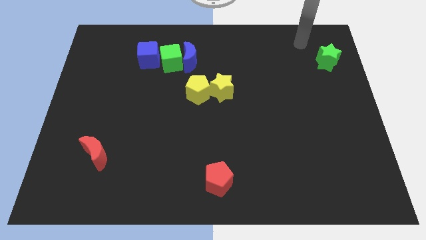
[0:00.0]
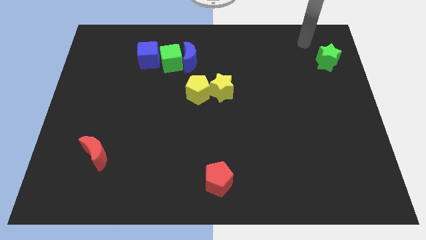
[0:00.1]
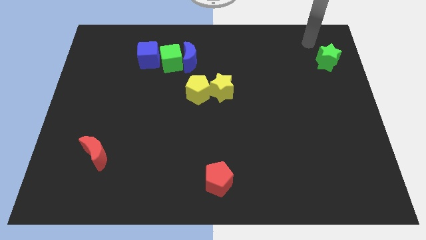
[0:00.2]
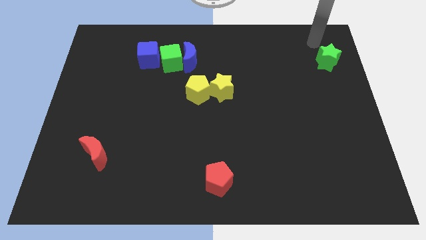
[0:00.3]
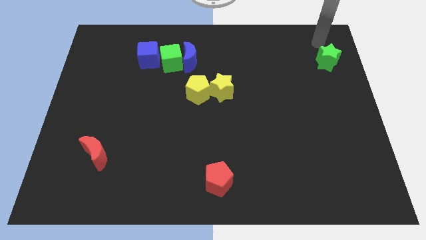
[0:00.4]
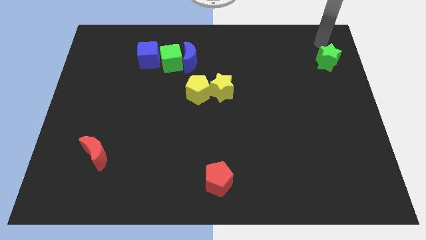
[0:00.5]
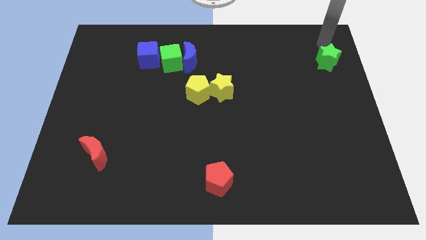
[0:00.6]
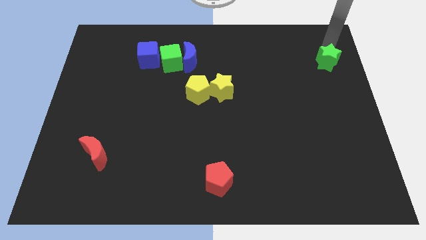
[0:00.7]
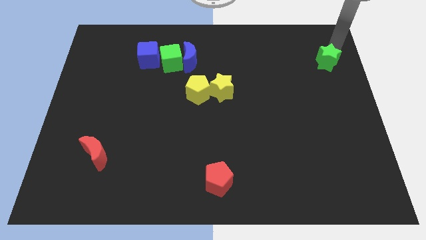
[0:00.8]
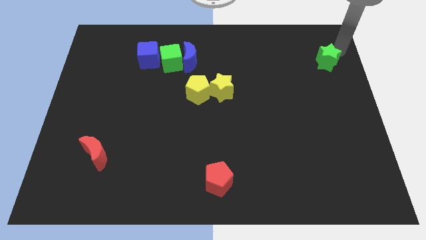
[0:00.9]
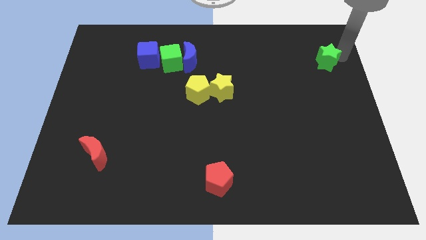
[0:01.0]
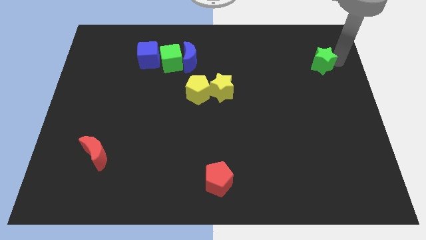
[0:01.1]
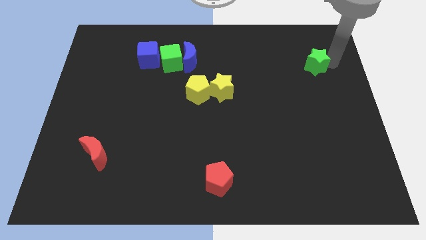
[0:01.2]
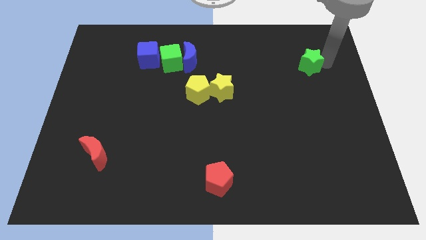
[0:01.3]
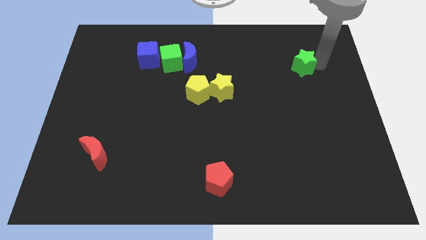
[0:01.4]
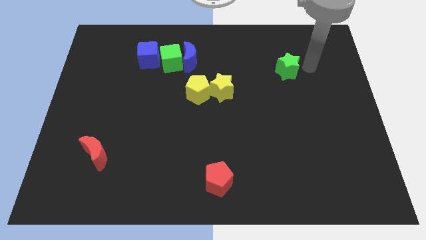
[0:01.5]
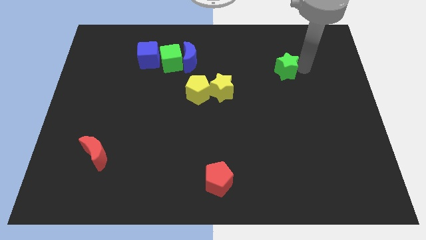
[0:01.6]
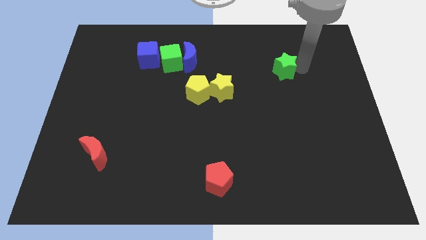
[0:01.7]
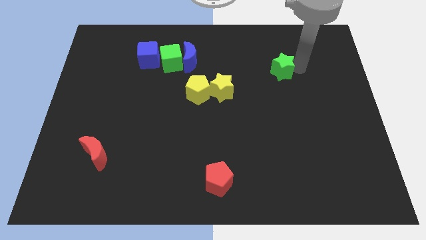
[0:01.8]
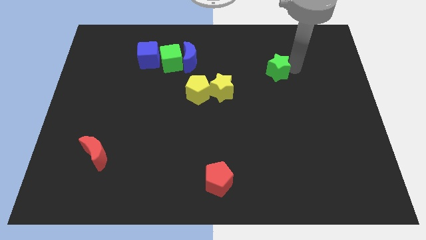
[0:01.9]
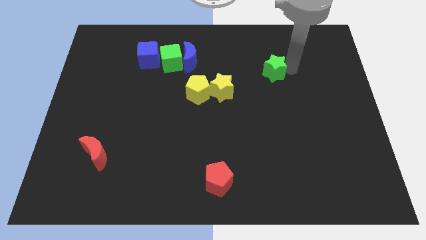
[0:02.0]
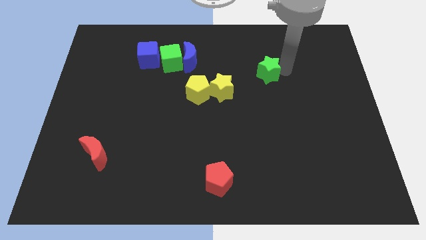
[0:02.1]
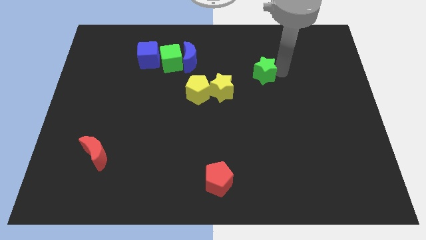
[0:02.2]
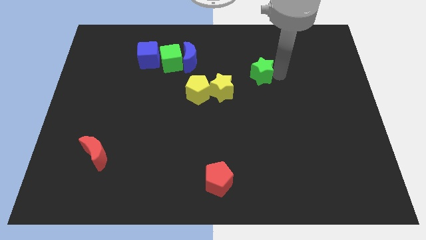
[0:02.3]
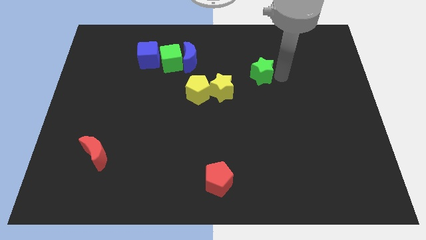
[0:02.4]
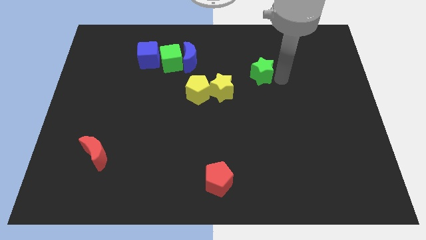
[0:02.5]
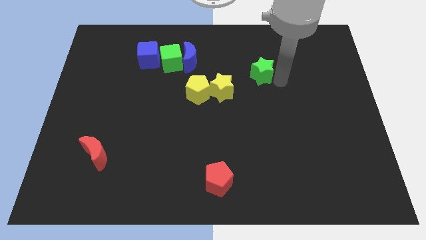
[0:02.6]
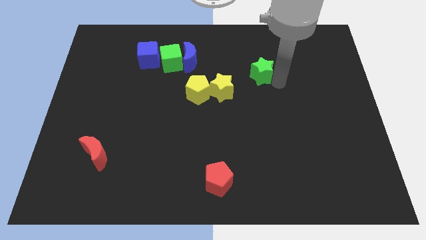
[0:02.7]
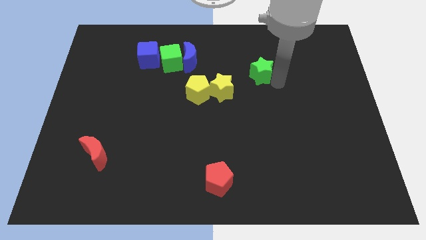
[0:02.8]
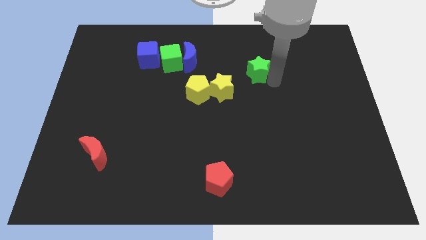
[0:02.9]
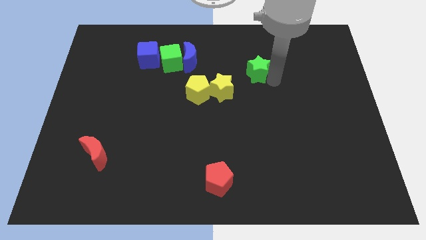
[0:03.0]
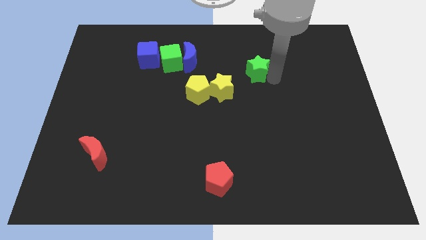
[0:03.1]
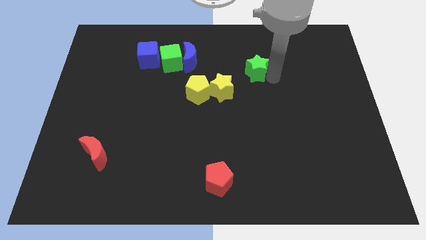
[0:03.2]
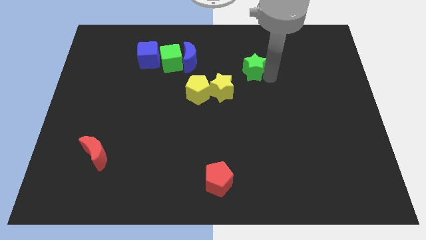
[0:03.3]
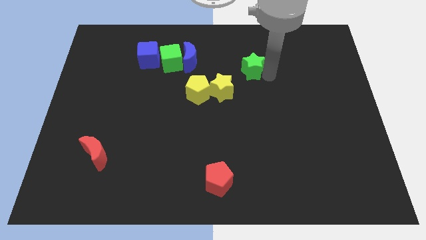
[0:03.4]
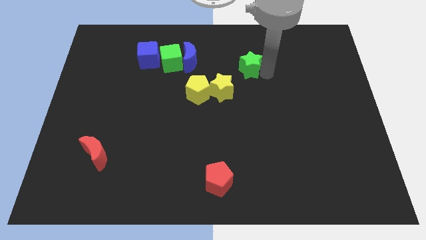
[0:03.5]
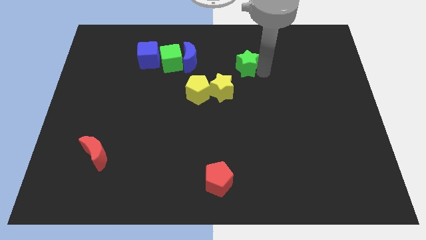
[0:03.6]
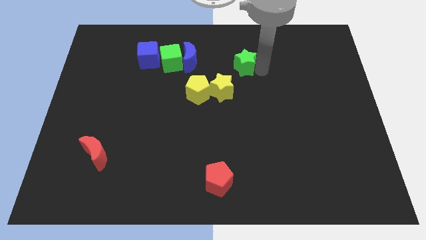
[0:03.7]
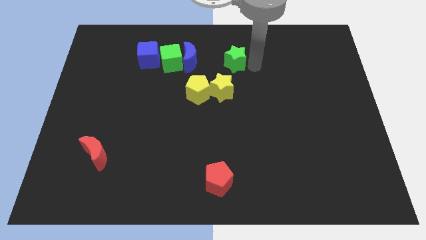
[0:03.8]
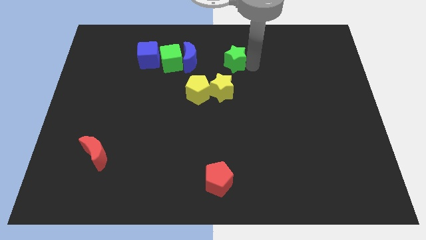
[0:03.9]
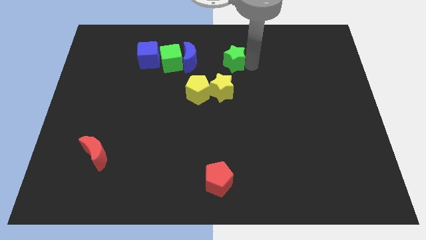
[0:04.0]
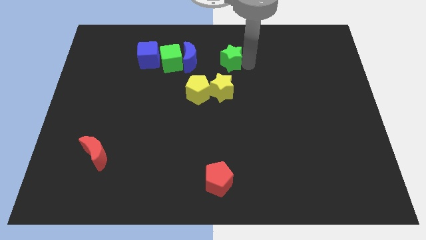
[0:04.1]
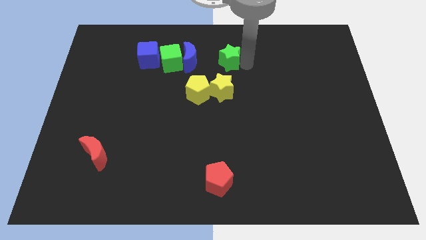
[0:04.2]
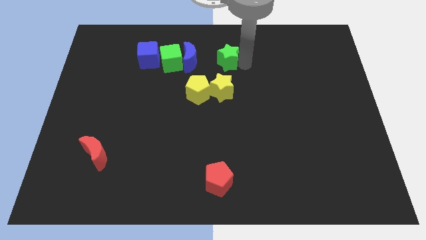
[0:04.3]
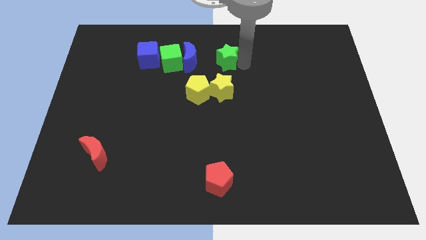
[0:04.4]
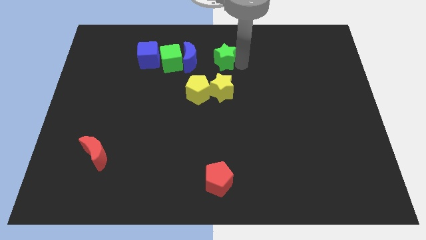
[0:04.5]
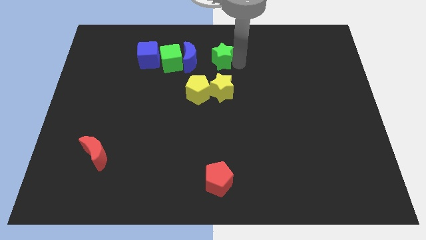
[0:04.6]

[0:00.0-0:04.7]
place the green star right to the blue moon

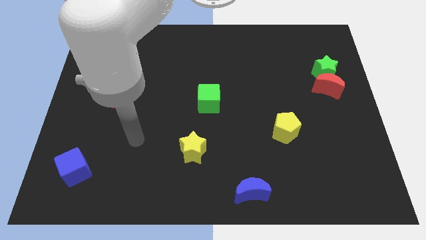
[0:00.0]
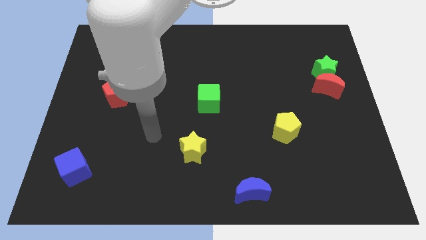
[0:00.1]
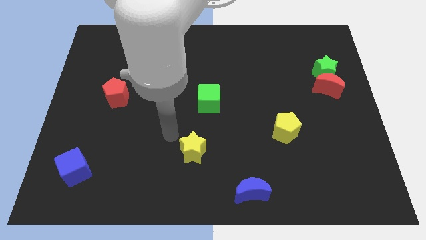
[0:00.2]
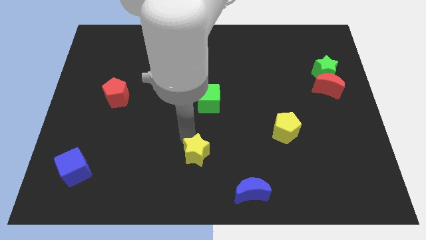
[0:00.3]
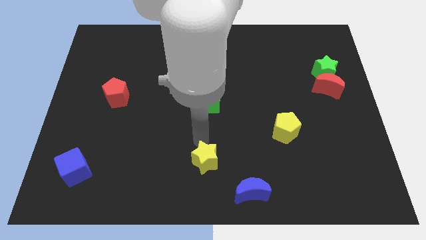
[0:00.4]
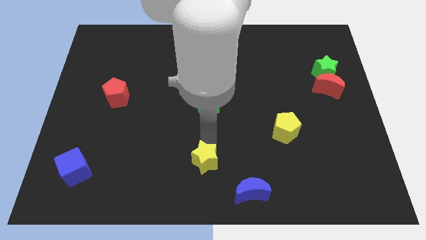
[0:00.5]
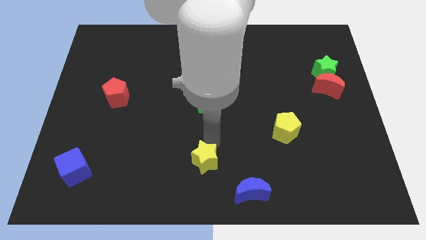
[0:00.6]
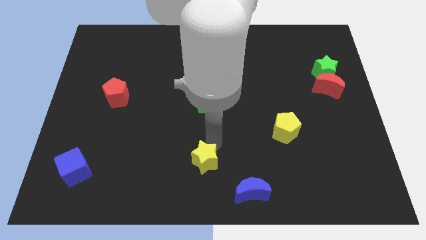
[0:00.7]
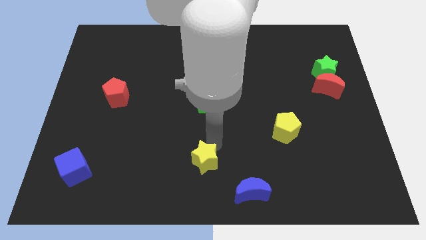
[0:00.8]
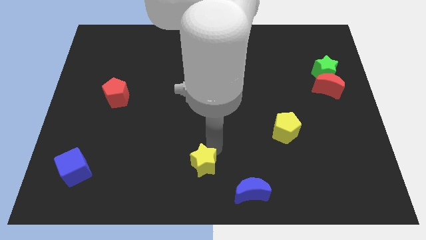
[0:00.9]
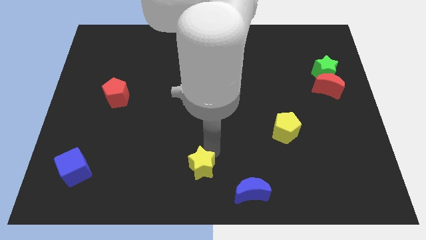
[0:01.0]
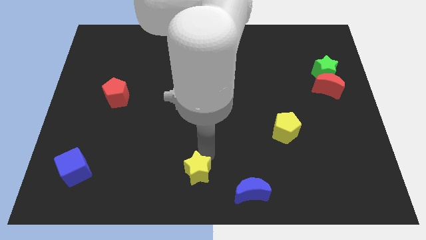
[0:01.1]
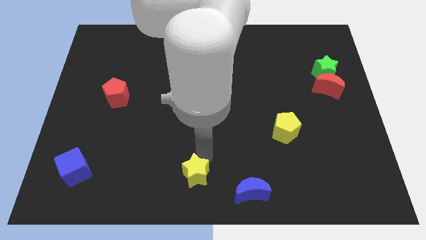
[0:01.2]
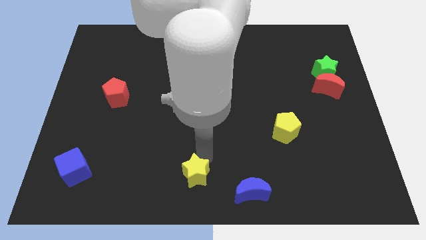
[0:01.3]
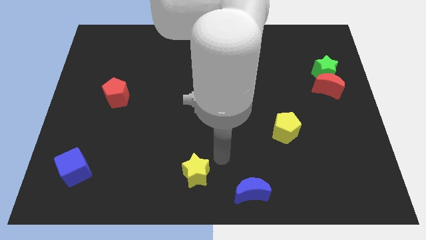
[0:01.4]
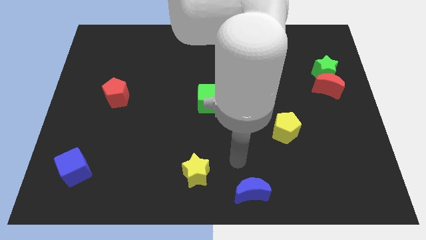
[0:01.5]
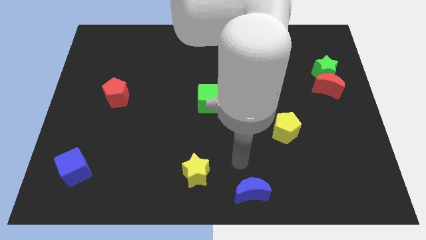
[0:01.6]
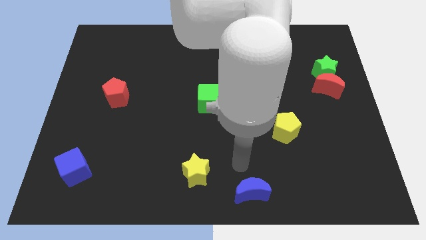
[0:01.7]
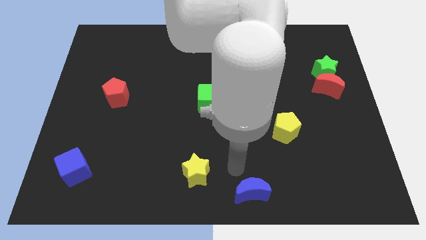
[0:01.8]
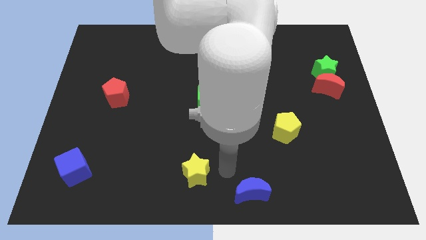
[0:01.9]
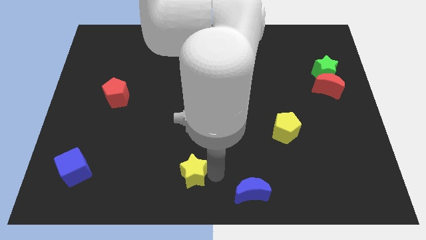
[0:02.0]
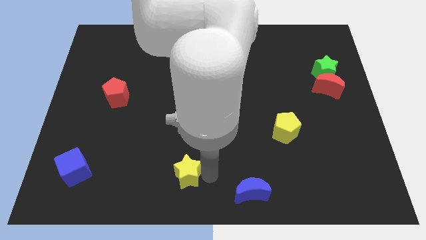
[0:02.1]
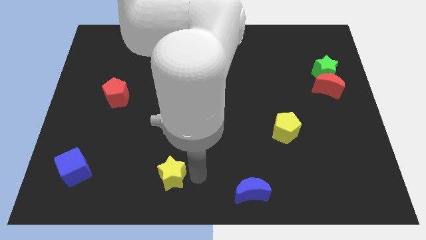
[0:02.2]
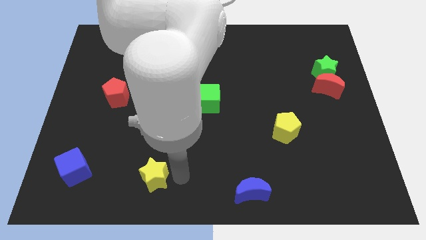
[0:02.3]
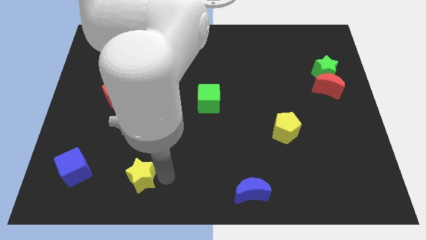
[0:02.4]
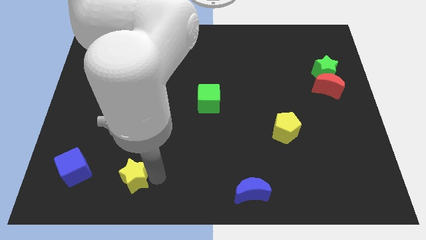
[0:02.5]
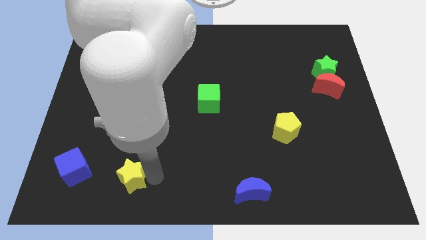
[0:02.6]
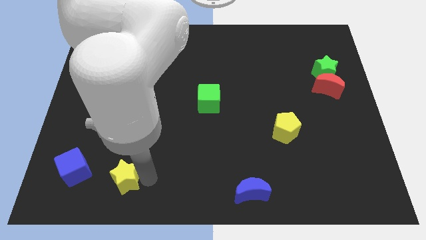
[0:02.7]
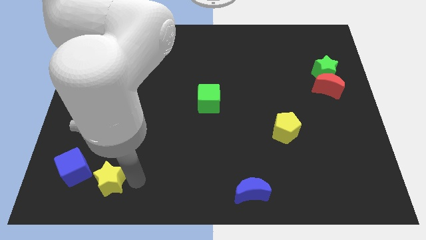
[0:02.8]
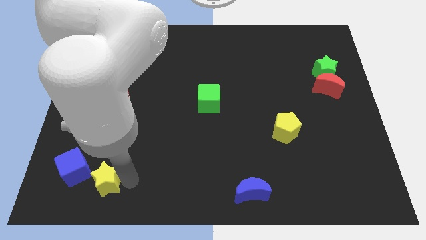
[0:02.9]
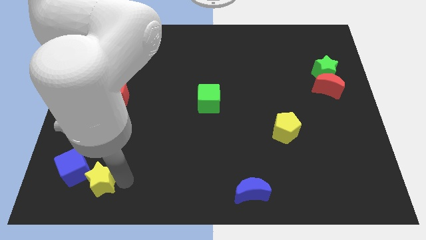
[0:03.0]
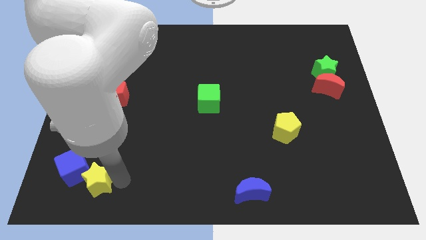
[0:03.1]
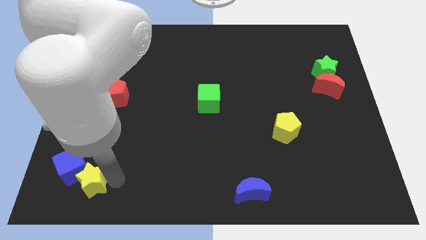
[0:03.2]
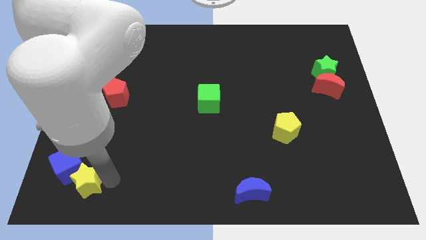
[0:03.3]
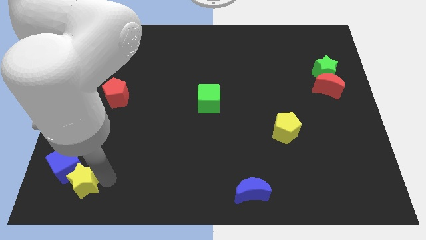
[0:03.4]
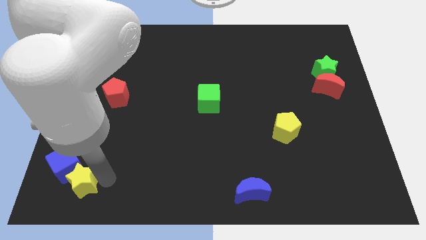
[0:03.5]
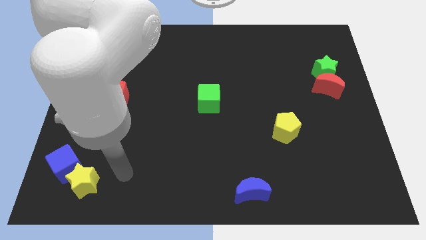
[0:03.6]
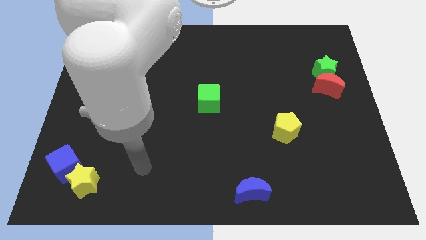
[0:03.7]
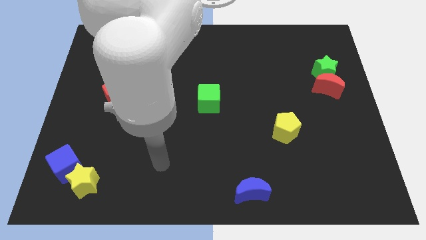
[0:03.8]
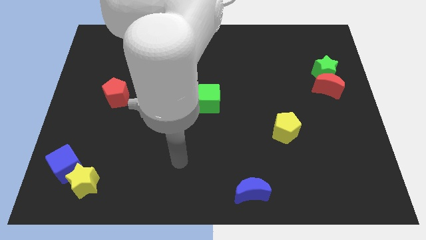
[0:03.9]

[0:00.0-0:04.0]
move the yellow star below the blue cube

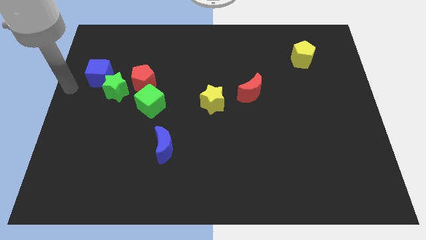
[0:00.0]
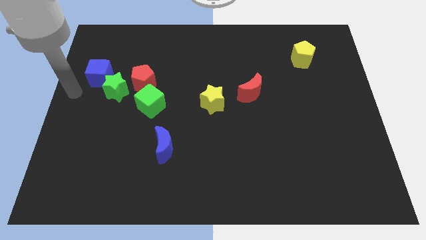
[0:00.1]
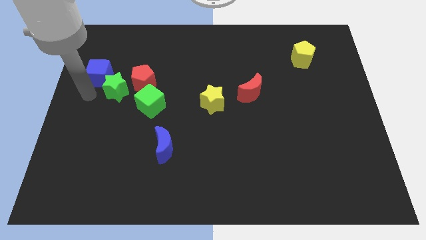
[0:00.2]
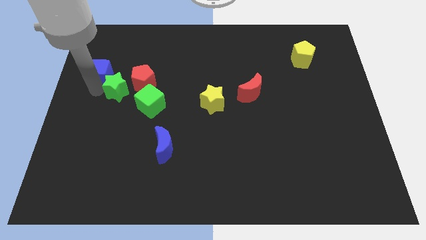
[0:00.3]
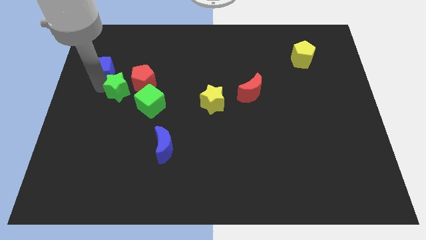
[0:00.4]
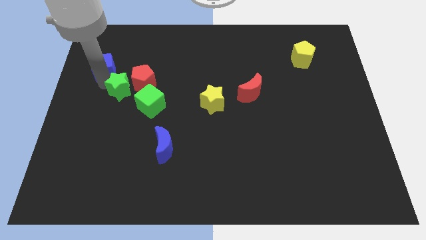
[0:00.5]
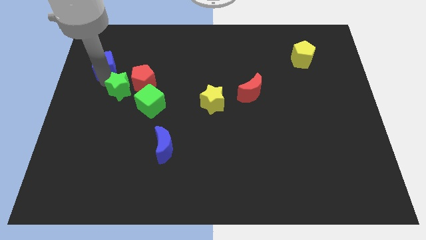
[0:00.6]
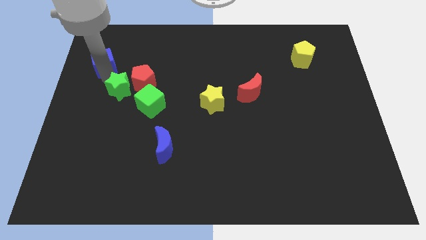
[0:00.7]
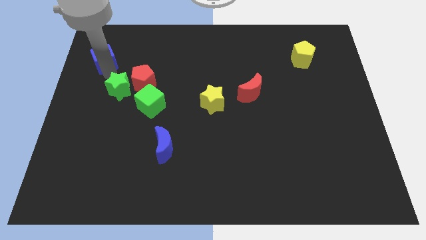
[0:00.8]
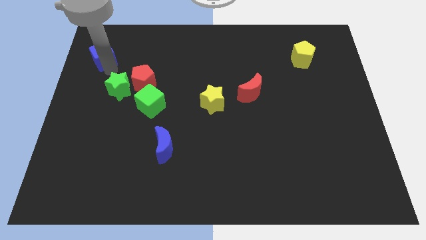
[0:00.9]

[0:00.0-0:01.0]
separate blue cube from green star
